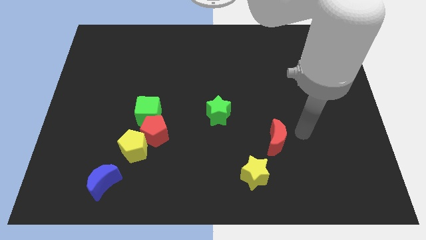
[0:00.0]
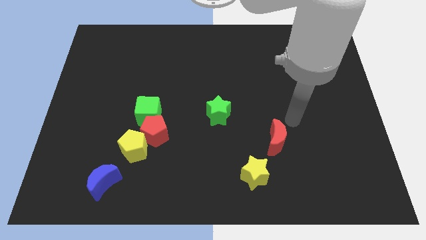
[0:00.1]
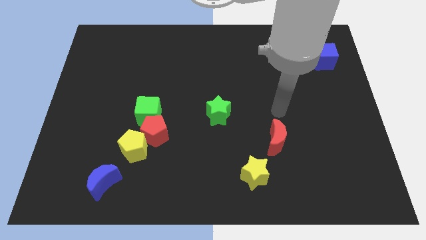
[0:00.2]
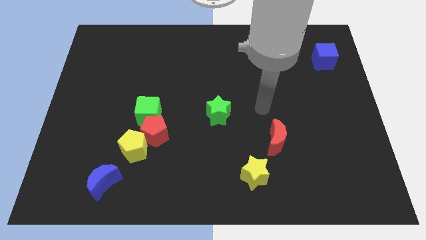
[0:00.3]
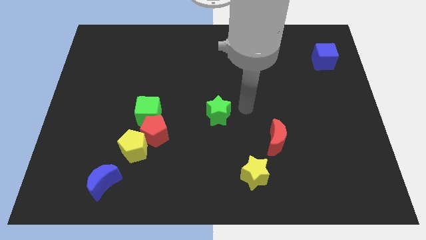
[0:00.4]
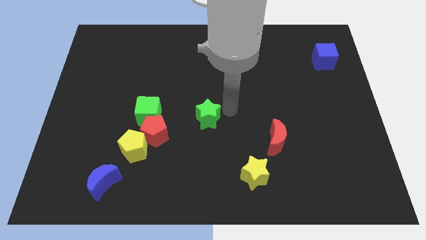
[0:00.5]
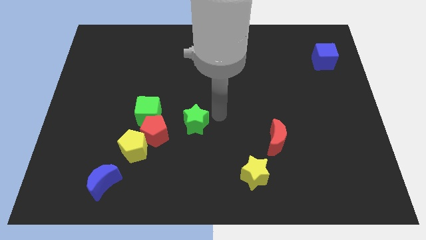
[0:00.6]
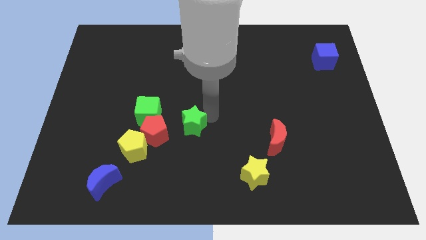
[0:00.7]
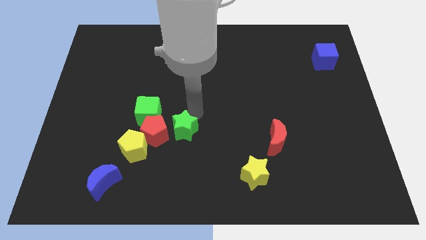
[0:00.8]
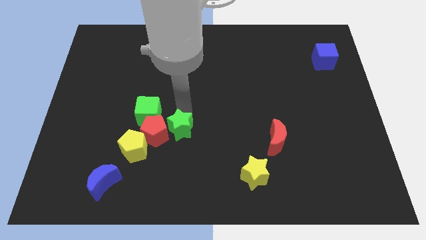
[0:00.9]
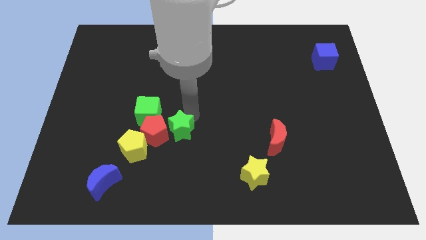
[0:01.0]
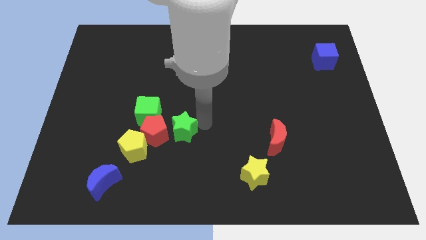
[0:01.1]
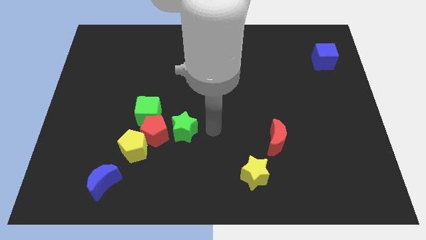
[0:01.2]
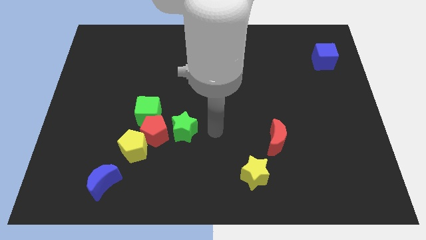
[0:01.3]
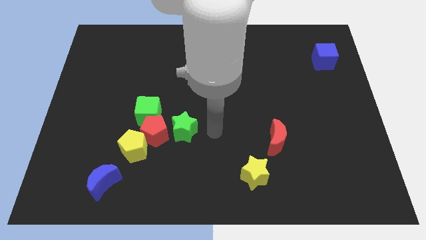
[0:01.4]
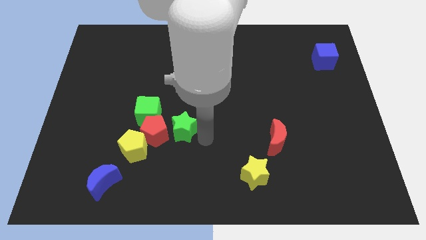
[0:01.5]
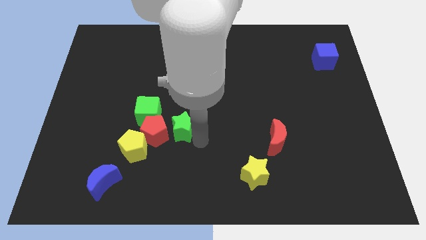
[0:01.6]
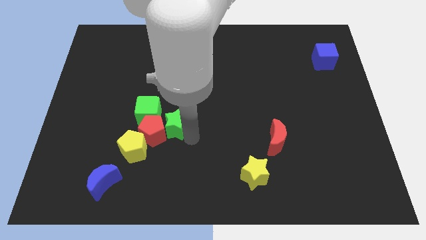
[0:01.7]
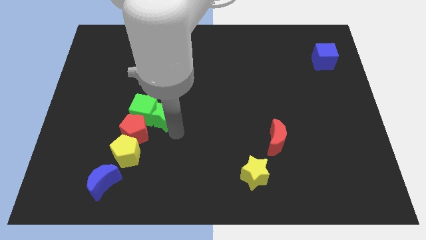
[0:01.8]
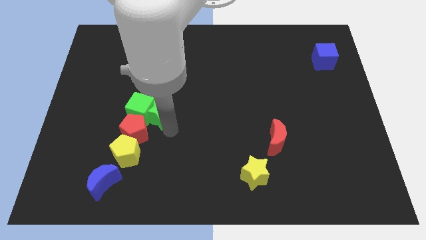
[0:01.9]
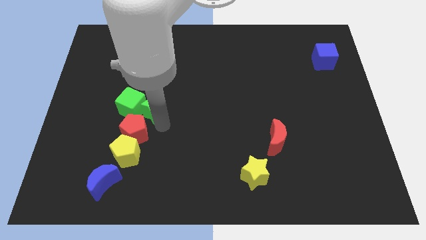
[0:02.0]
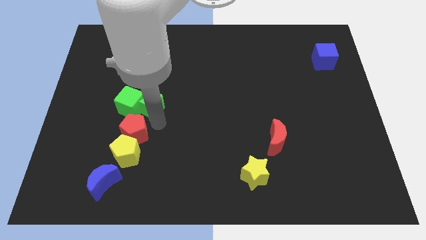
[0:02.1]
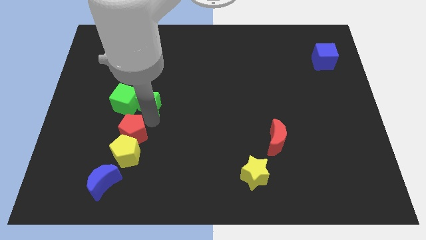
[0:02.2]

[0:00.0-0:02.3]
push green star in to green cube

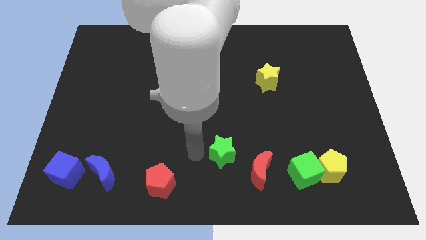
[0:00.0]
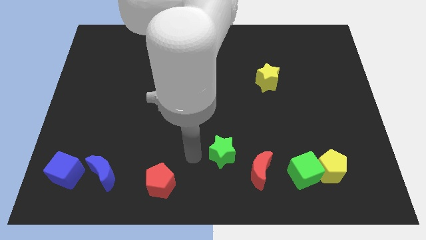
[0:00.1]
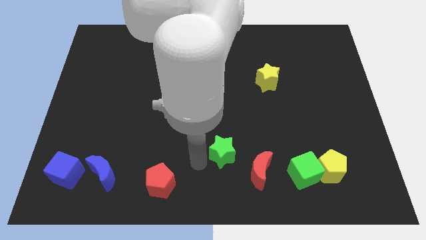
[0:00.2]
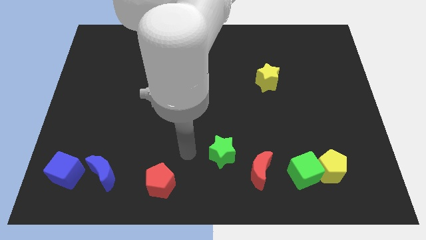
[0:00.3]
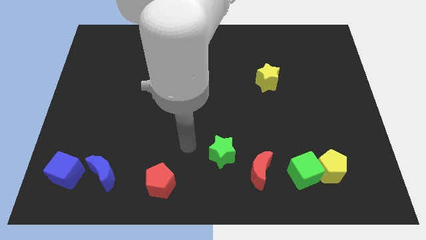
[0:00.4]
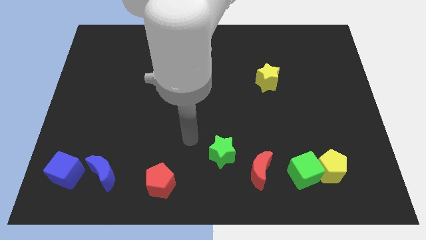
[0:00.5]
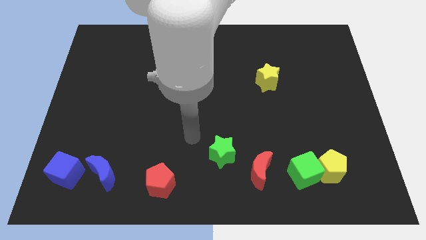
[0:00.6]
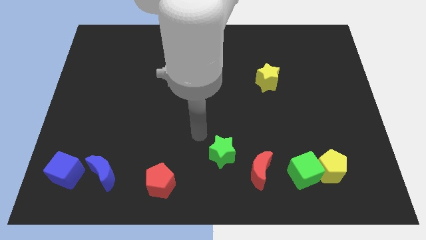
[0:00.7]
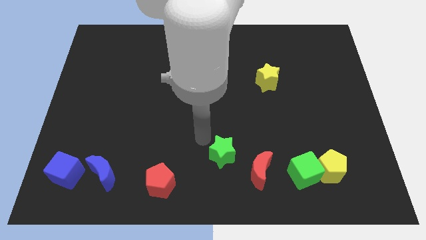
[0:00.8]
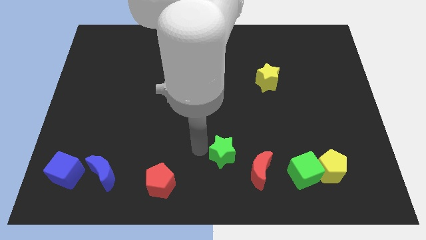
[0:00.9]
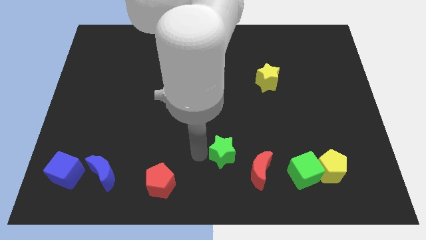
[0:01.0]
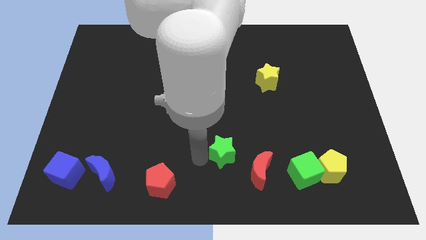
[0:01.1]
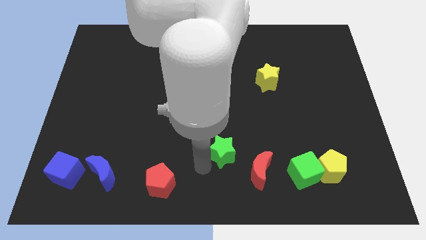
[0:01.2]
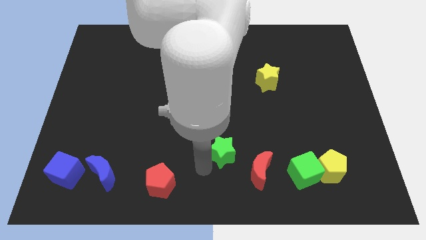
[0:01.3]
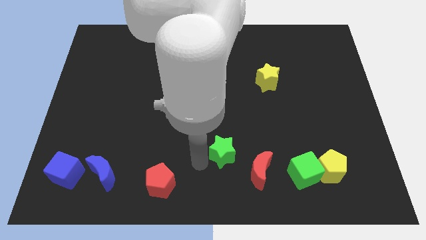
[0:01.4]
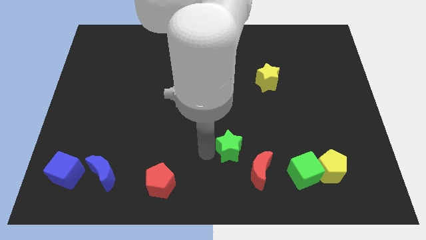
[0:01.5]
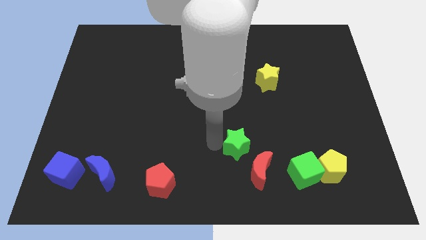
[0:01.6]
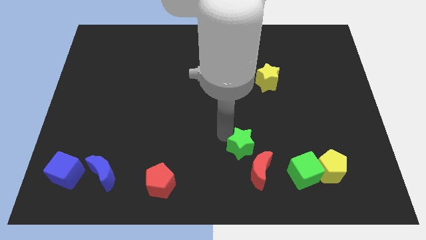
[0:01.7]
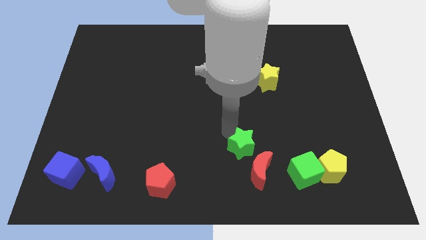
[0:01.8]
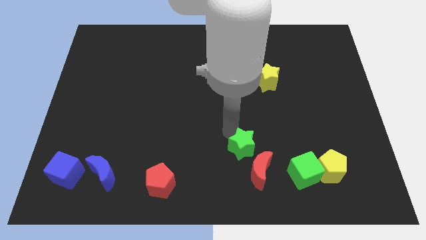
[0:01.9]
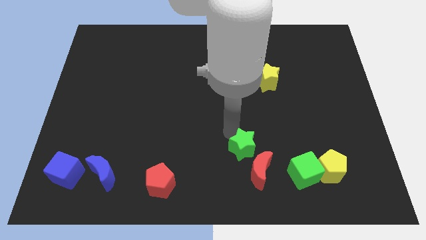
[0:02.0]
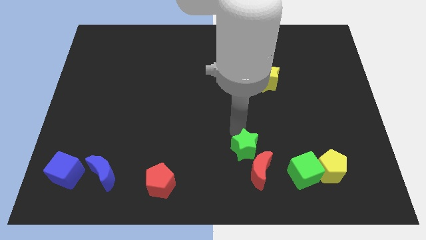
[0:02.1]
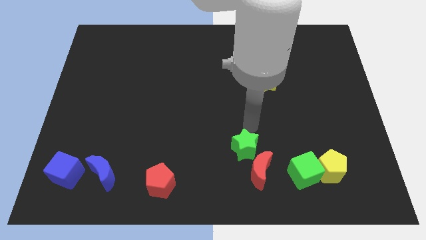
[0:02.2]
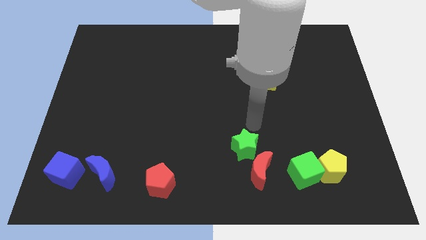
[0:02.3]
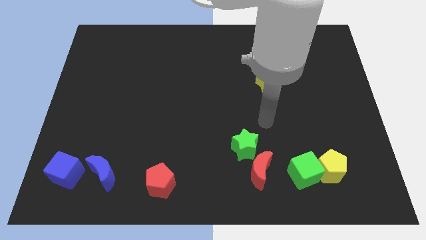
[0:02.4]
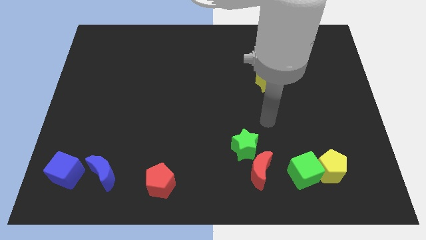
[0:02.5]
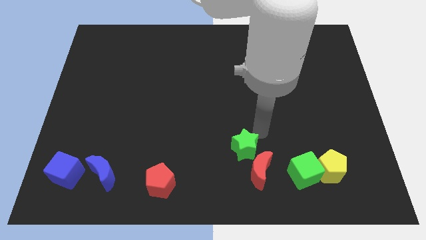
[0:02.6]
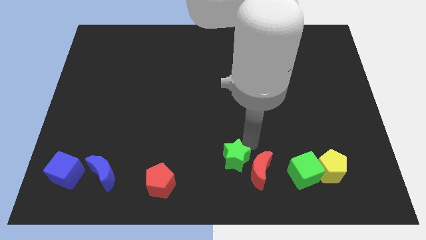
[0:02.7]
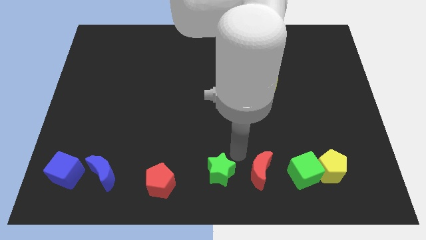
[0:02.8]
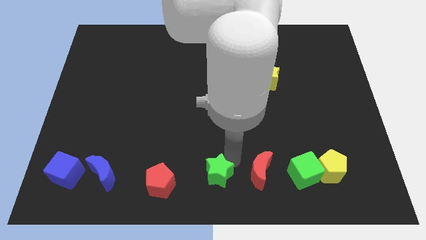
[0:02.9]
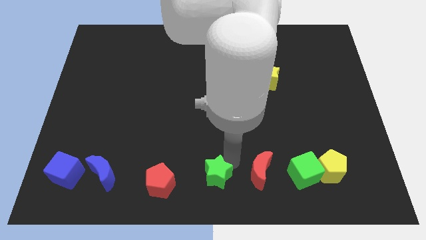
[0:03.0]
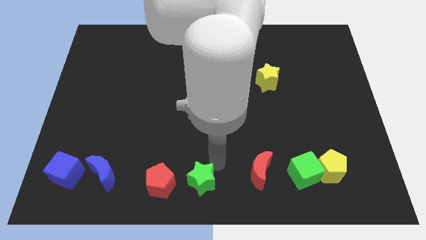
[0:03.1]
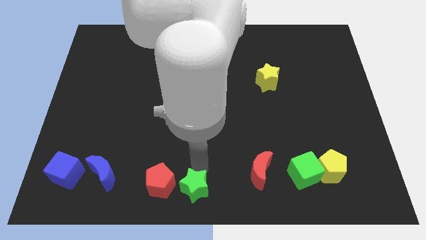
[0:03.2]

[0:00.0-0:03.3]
place the green star right to the red pentagon

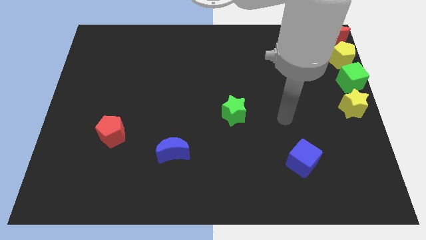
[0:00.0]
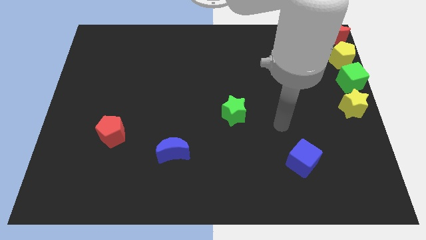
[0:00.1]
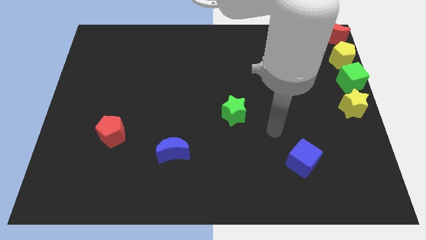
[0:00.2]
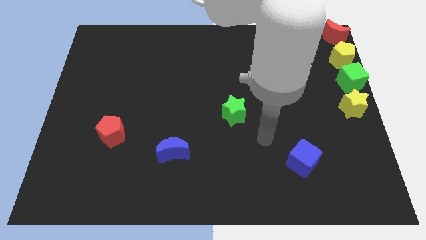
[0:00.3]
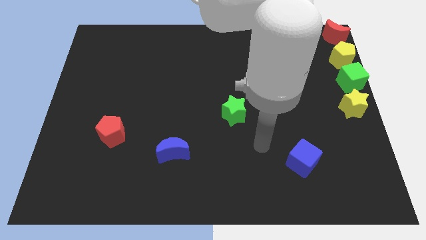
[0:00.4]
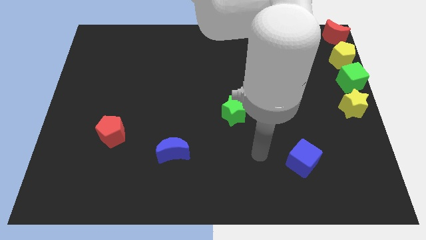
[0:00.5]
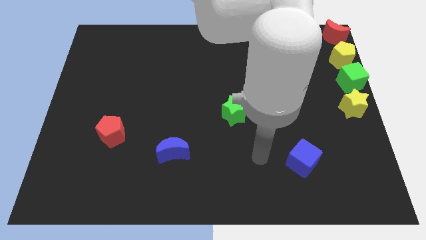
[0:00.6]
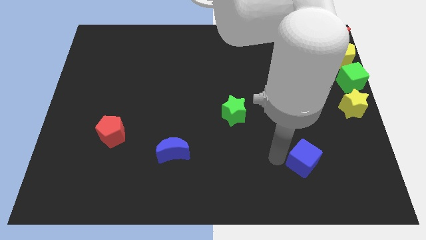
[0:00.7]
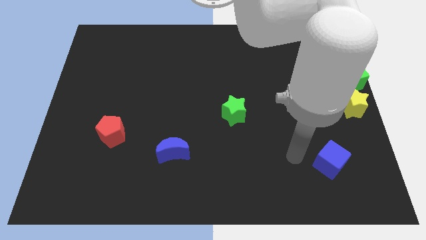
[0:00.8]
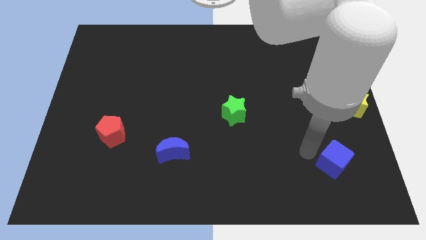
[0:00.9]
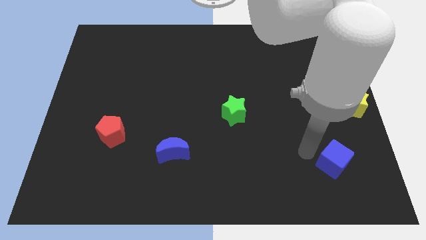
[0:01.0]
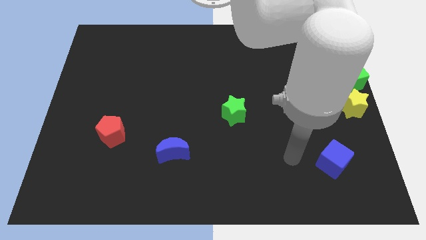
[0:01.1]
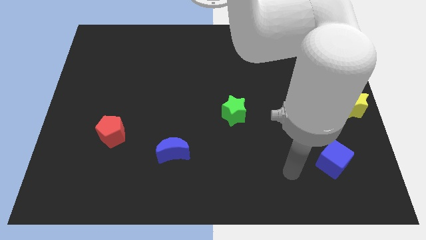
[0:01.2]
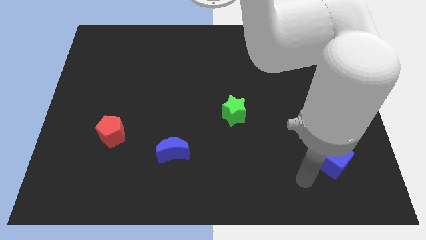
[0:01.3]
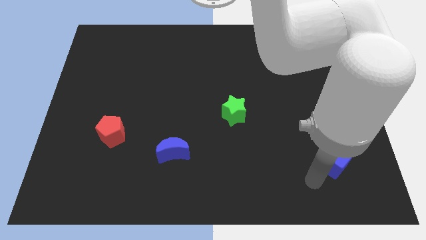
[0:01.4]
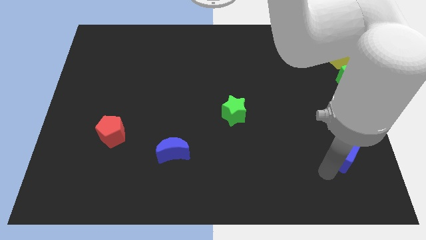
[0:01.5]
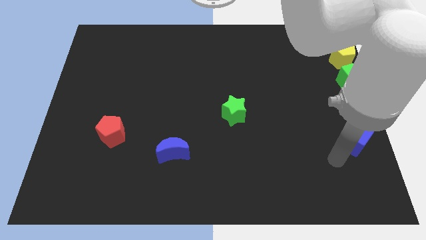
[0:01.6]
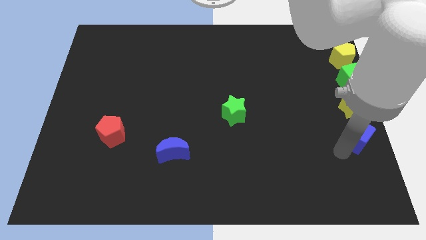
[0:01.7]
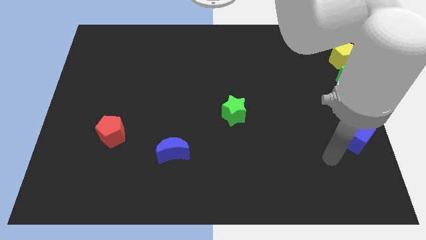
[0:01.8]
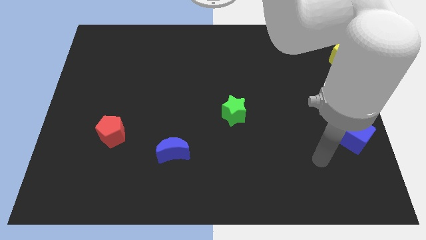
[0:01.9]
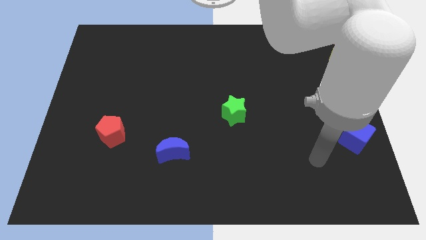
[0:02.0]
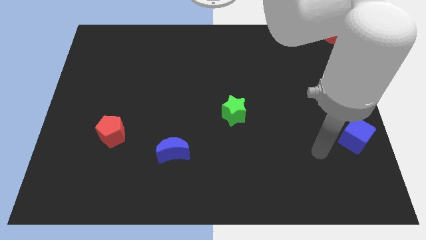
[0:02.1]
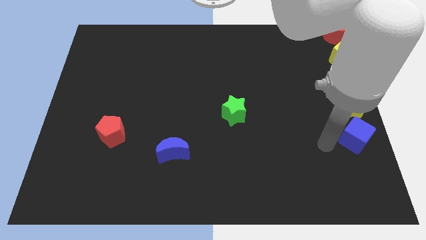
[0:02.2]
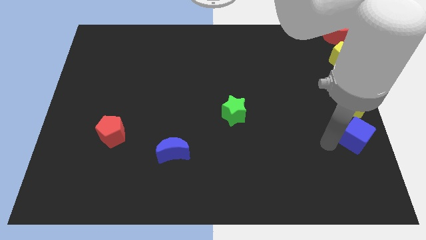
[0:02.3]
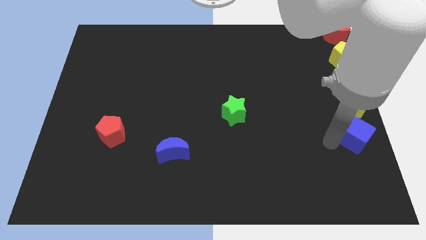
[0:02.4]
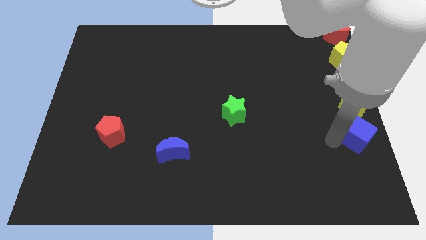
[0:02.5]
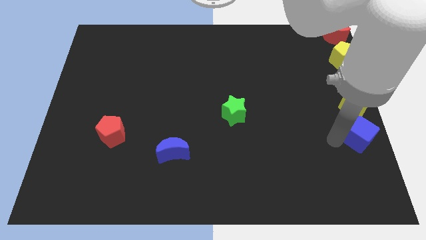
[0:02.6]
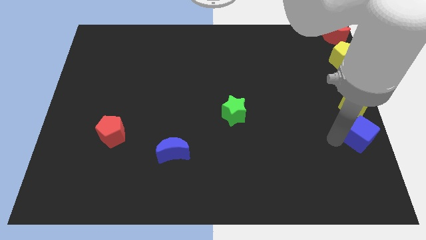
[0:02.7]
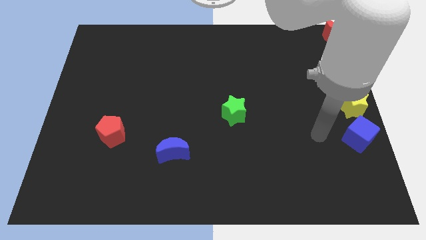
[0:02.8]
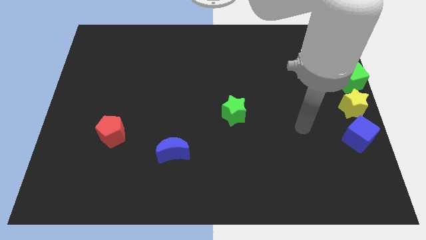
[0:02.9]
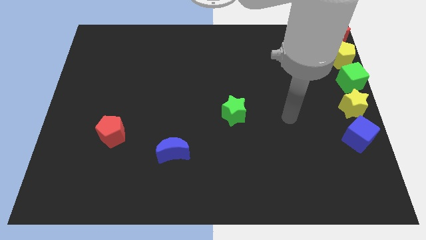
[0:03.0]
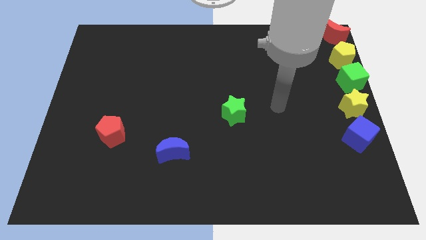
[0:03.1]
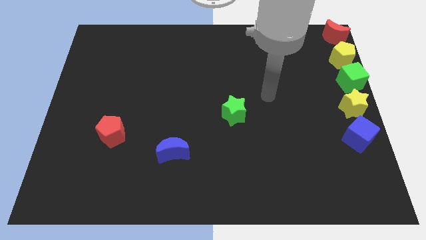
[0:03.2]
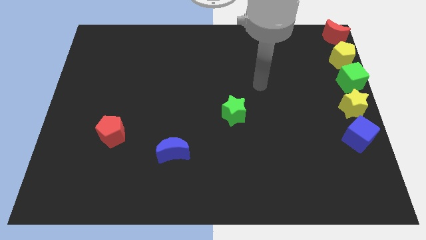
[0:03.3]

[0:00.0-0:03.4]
place the blue cube to the bottom side of the yellow star
